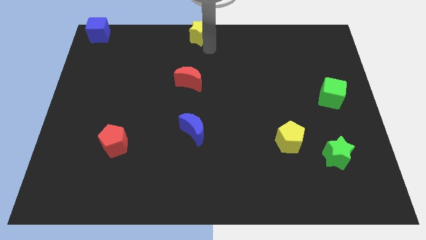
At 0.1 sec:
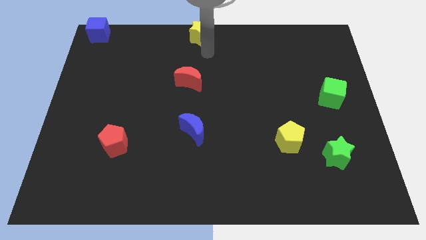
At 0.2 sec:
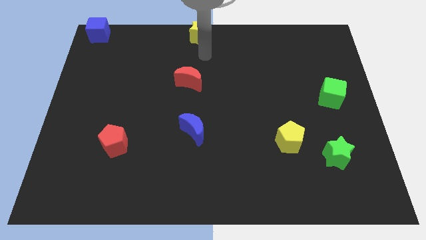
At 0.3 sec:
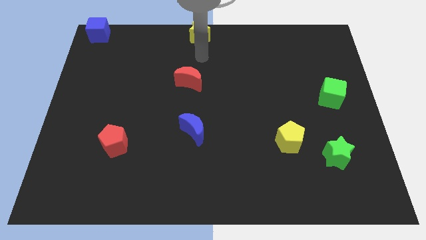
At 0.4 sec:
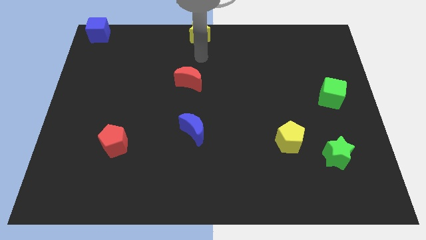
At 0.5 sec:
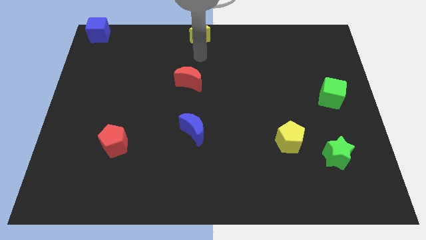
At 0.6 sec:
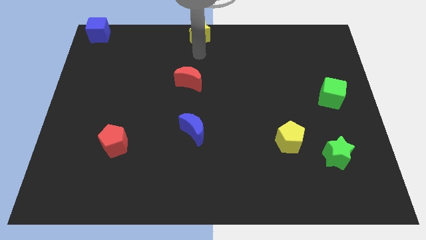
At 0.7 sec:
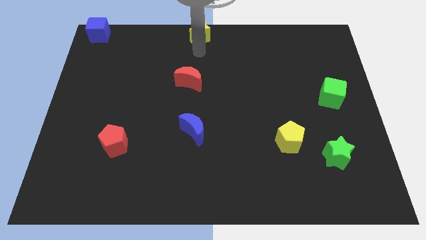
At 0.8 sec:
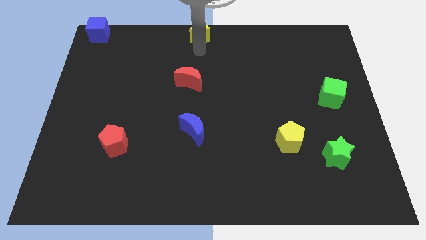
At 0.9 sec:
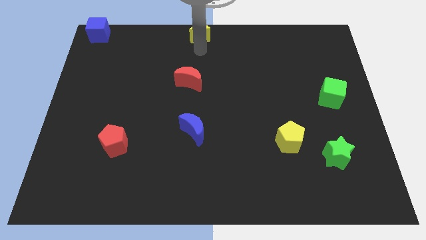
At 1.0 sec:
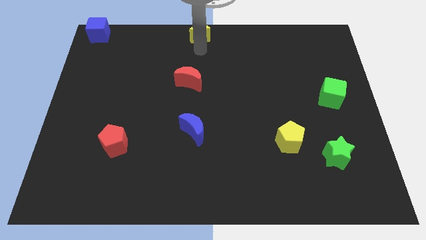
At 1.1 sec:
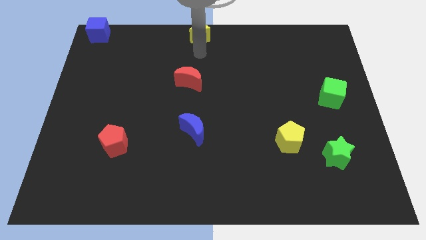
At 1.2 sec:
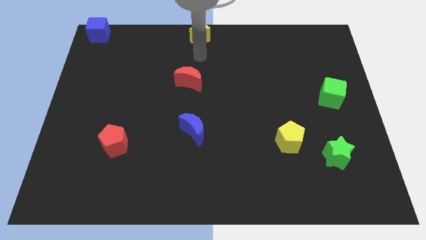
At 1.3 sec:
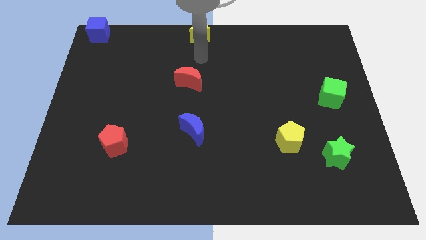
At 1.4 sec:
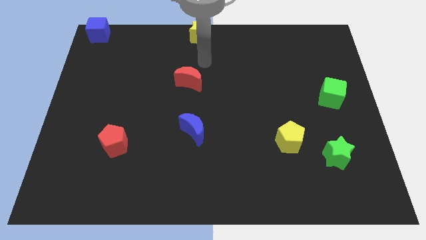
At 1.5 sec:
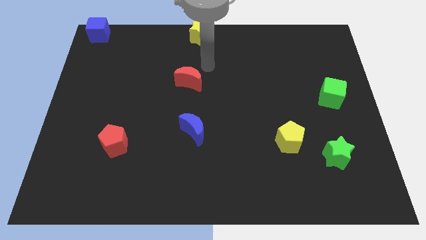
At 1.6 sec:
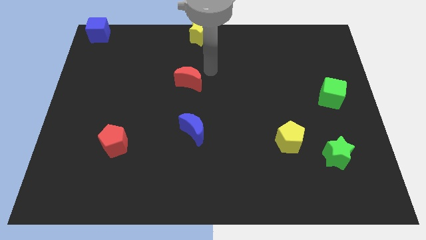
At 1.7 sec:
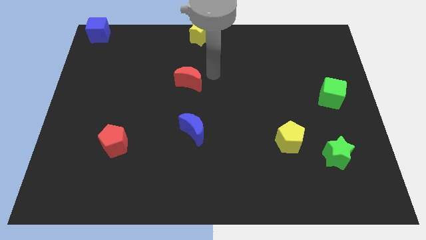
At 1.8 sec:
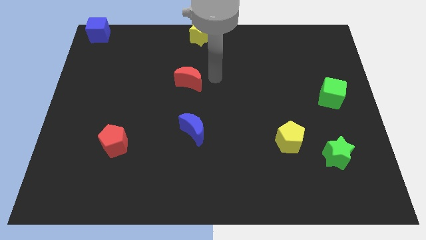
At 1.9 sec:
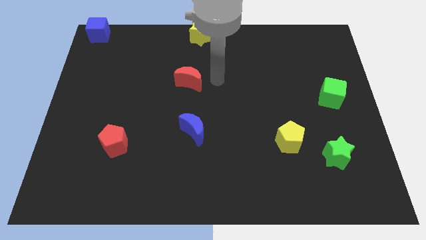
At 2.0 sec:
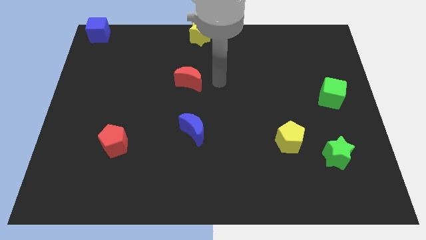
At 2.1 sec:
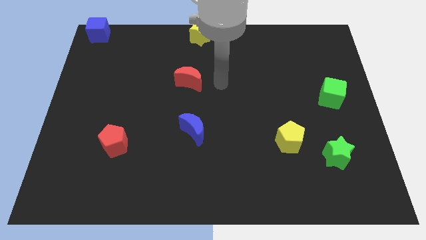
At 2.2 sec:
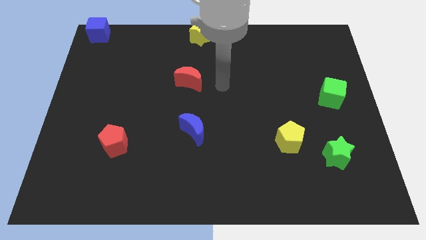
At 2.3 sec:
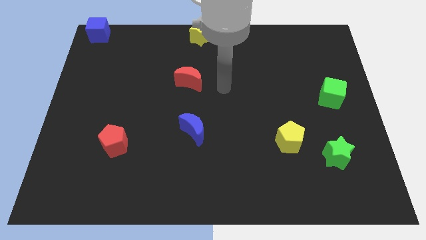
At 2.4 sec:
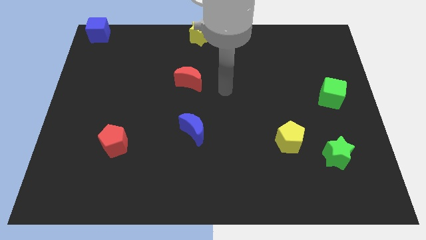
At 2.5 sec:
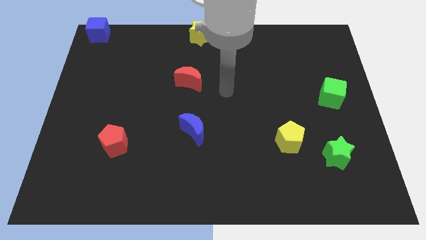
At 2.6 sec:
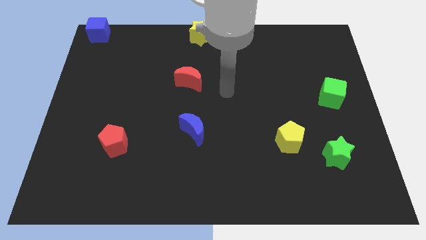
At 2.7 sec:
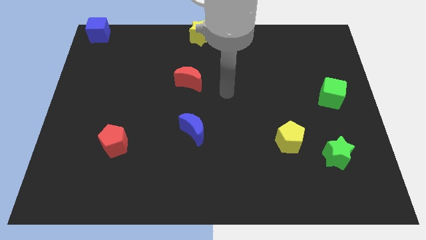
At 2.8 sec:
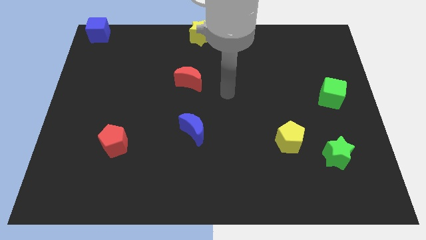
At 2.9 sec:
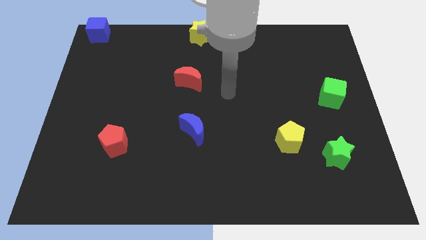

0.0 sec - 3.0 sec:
point your arm to the center of the board

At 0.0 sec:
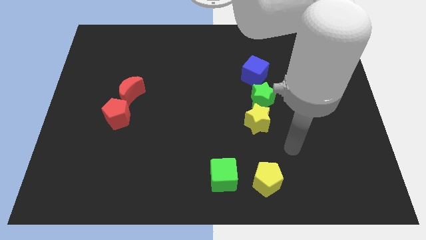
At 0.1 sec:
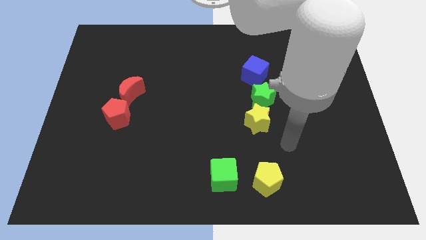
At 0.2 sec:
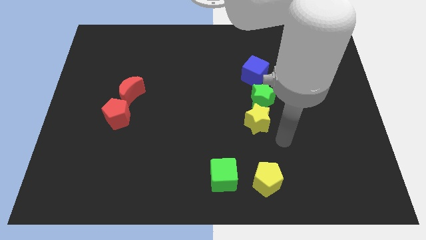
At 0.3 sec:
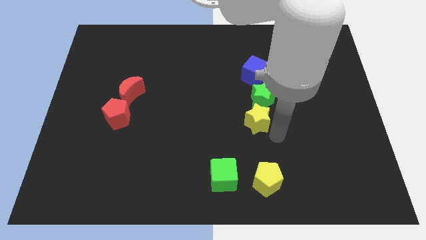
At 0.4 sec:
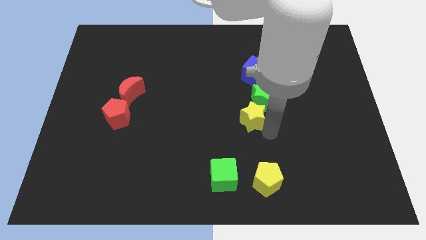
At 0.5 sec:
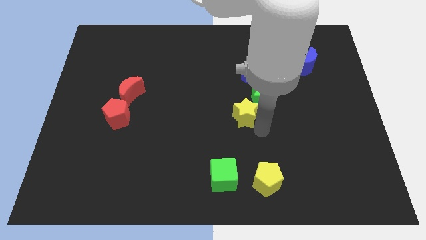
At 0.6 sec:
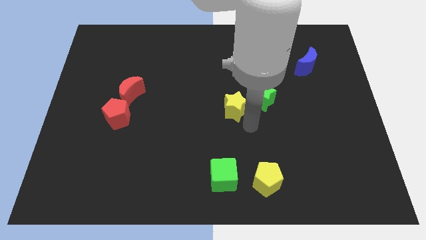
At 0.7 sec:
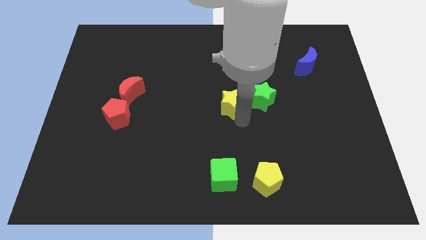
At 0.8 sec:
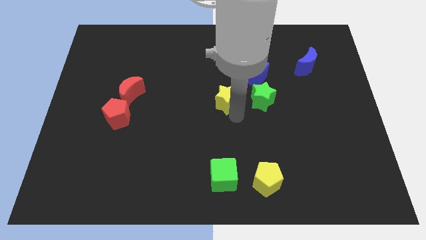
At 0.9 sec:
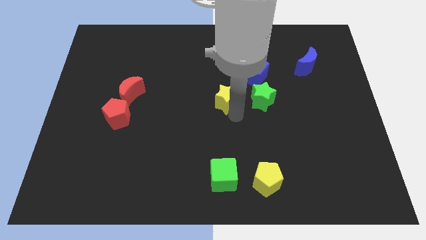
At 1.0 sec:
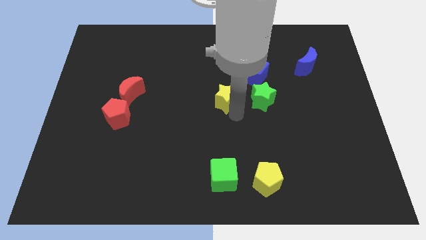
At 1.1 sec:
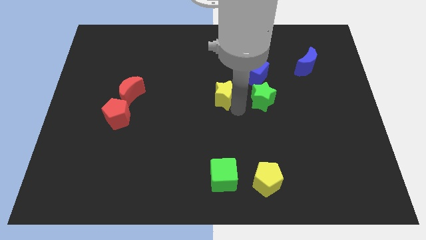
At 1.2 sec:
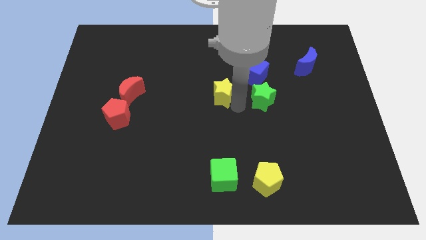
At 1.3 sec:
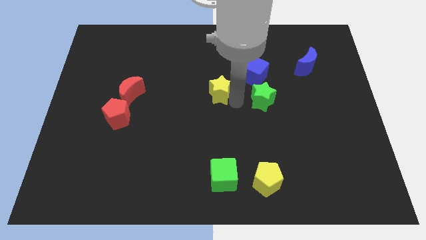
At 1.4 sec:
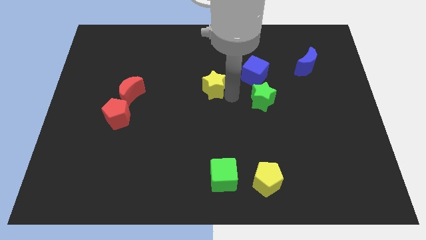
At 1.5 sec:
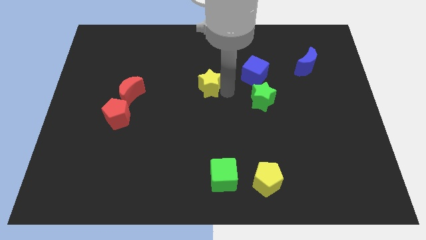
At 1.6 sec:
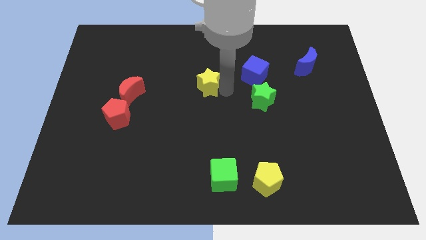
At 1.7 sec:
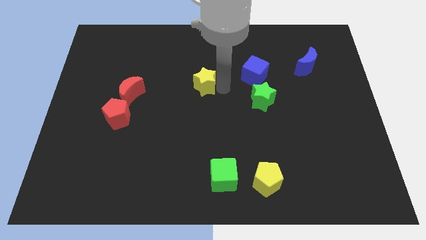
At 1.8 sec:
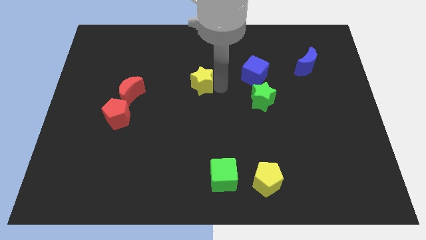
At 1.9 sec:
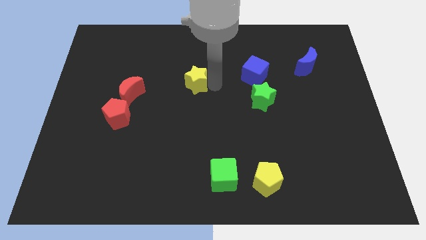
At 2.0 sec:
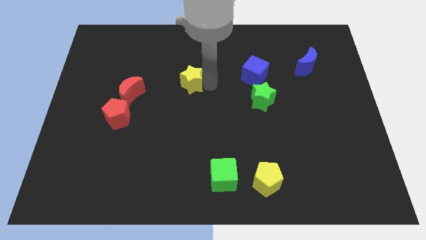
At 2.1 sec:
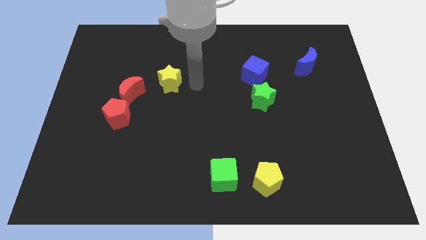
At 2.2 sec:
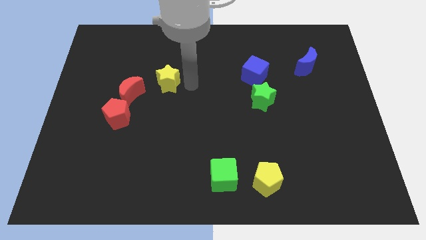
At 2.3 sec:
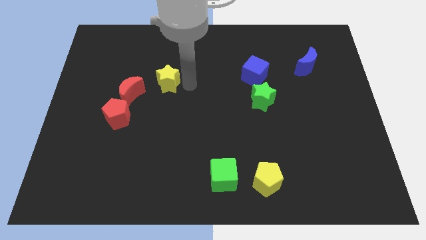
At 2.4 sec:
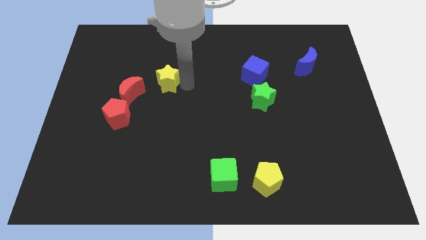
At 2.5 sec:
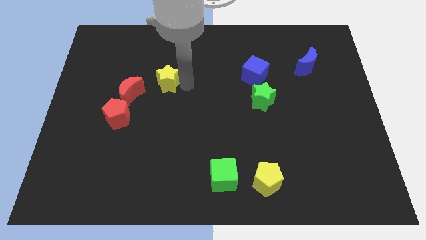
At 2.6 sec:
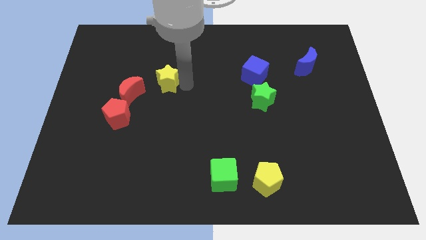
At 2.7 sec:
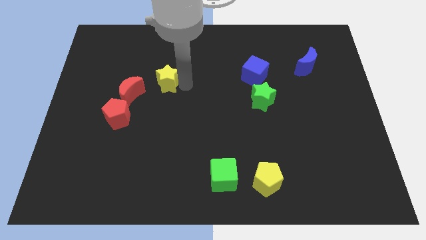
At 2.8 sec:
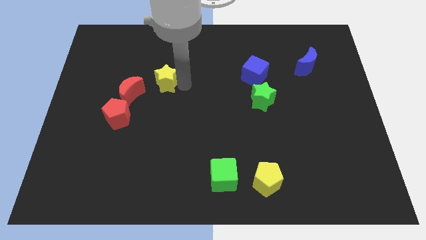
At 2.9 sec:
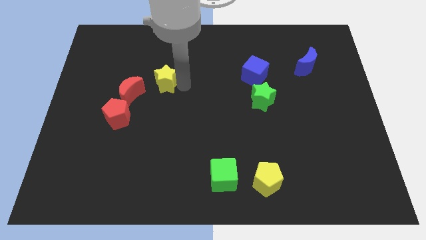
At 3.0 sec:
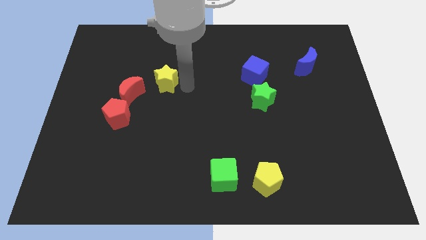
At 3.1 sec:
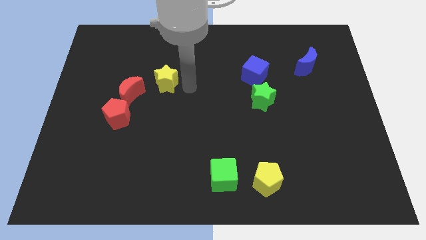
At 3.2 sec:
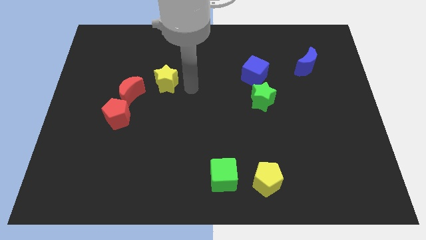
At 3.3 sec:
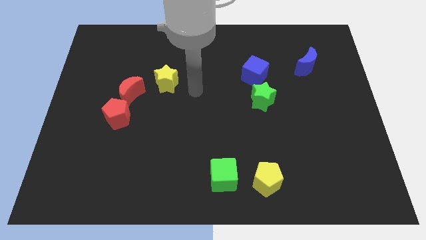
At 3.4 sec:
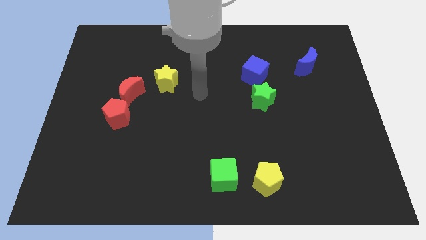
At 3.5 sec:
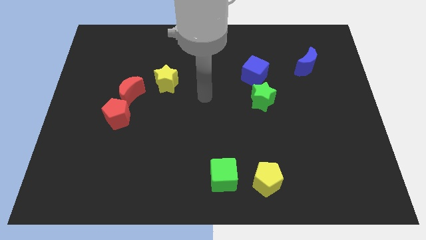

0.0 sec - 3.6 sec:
move the yellow star to the top right side of the red moon

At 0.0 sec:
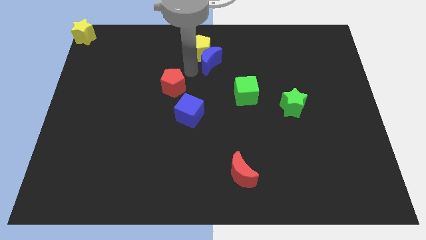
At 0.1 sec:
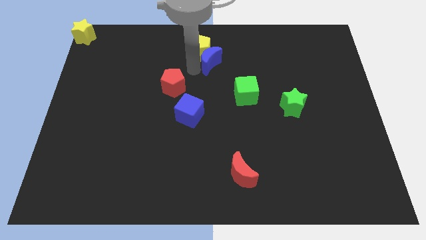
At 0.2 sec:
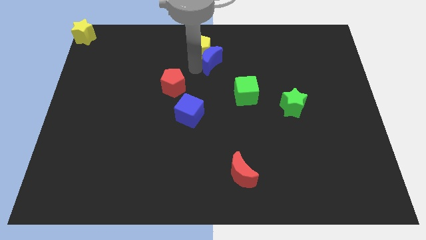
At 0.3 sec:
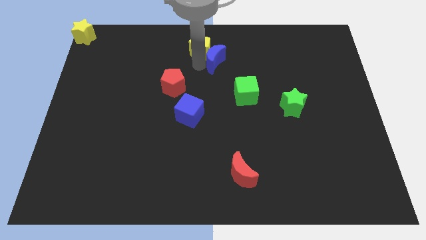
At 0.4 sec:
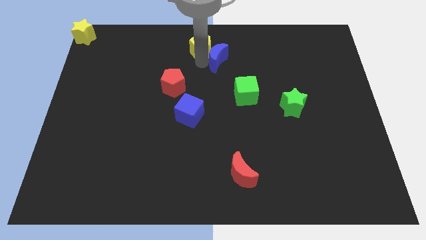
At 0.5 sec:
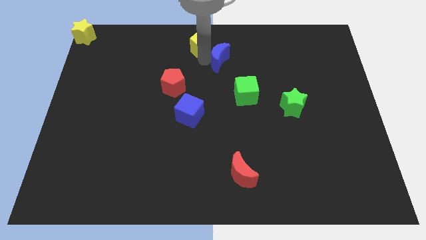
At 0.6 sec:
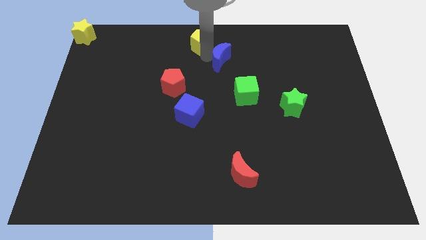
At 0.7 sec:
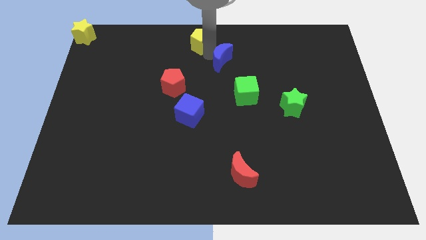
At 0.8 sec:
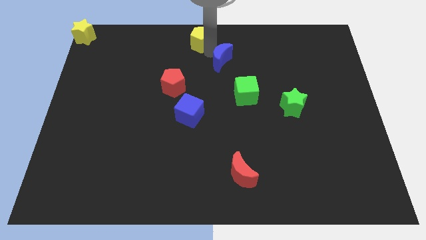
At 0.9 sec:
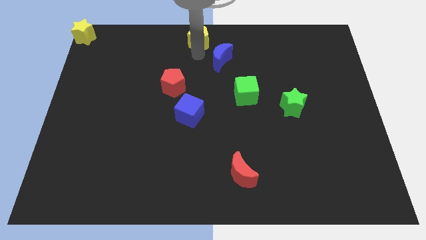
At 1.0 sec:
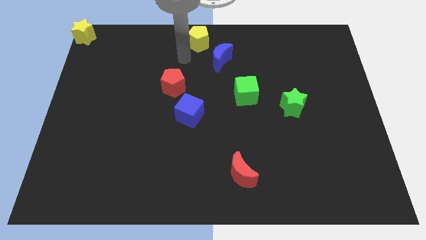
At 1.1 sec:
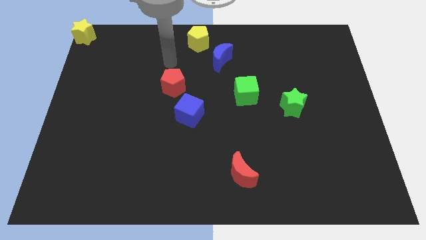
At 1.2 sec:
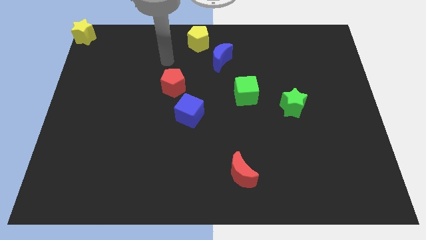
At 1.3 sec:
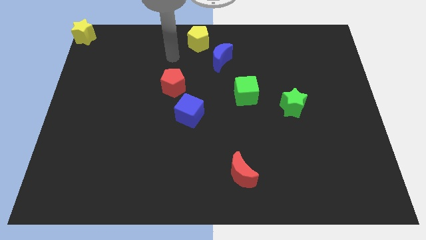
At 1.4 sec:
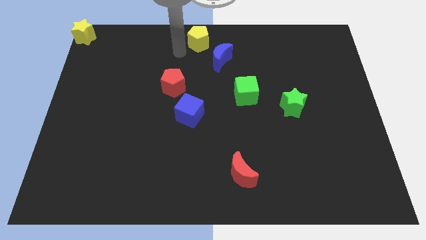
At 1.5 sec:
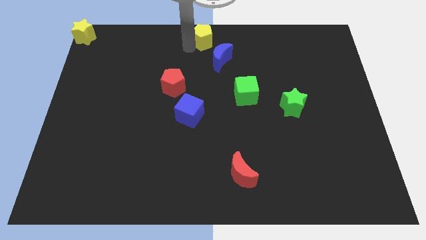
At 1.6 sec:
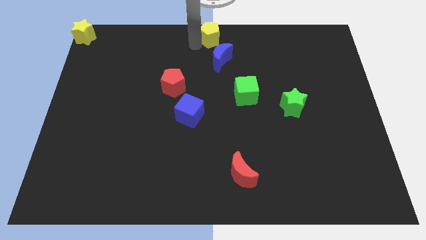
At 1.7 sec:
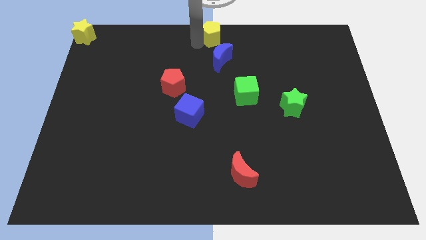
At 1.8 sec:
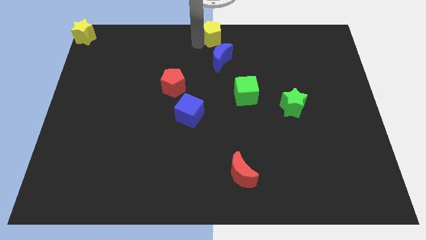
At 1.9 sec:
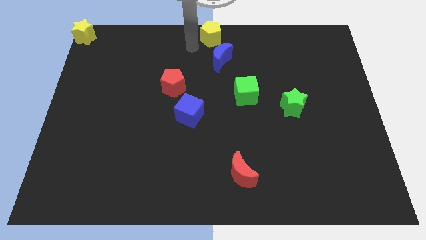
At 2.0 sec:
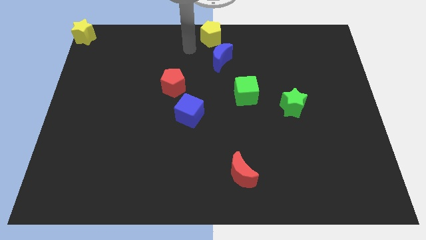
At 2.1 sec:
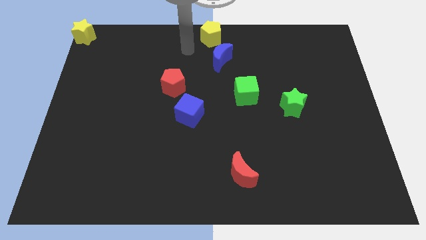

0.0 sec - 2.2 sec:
separate the yellow pentagon and the blue crescent
